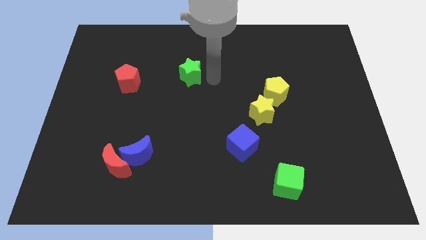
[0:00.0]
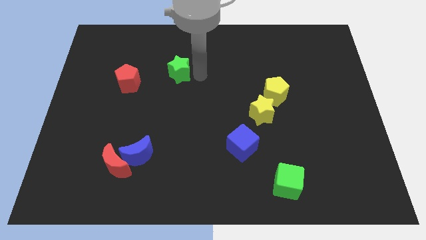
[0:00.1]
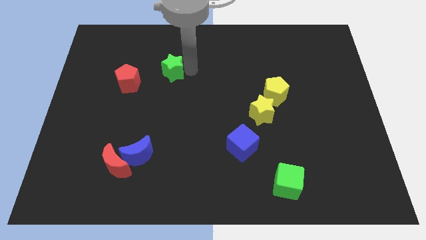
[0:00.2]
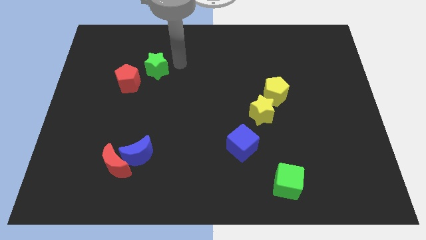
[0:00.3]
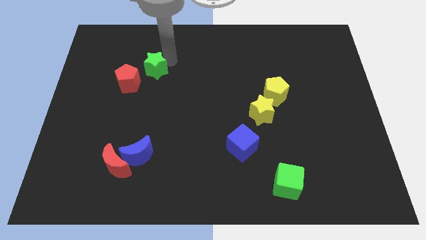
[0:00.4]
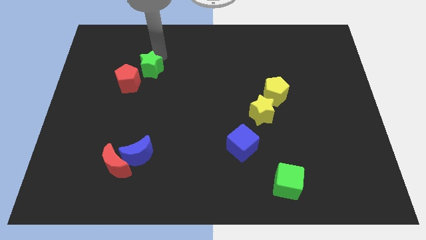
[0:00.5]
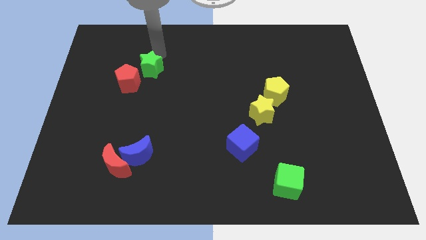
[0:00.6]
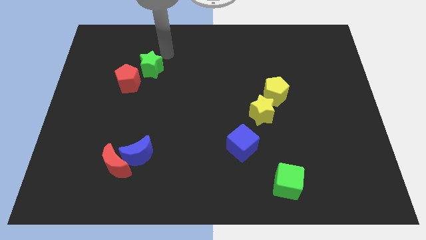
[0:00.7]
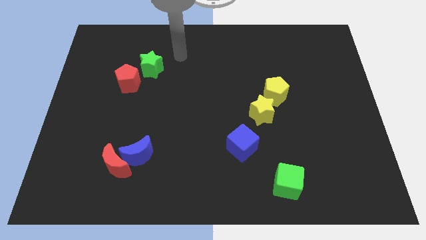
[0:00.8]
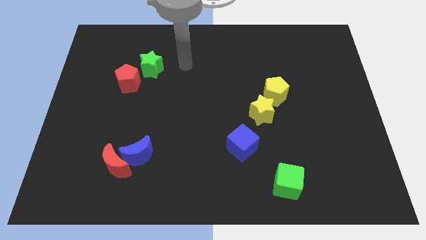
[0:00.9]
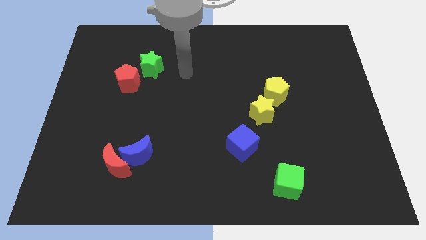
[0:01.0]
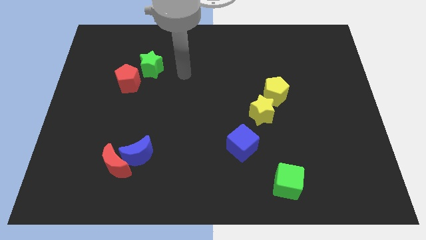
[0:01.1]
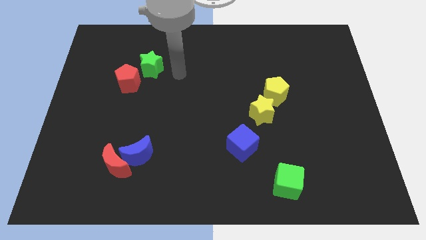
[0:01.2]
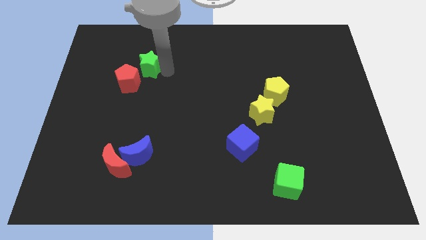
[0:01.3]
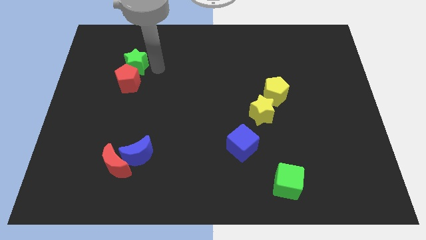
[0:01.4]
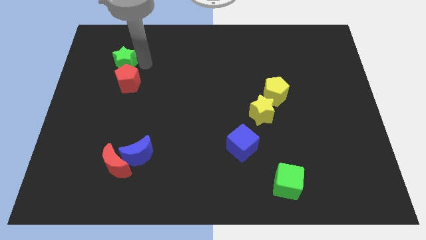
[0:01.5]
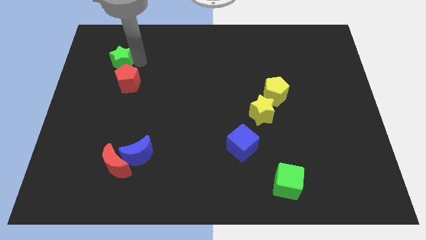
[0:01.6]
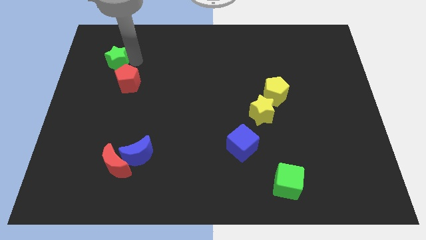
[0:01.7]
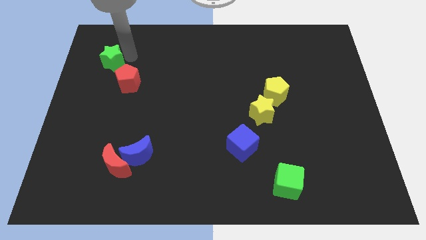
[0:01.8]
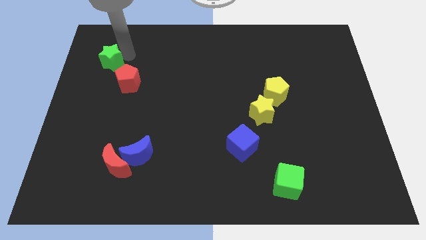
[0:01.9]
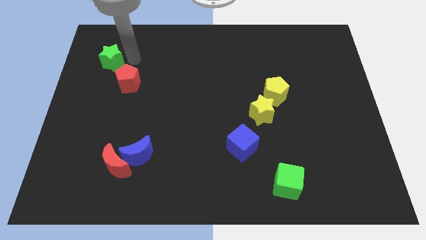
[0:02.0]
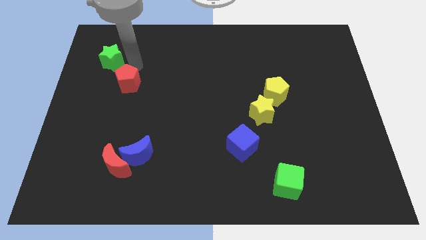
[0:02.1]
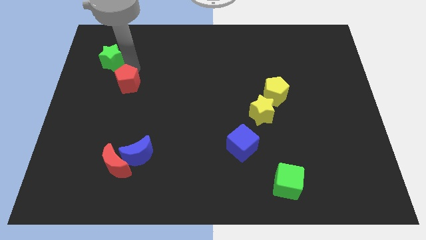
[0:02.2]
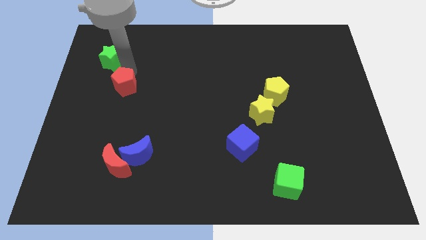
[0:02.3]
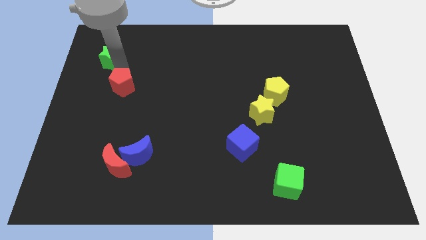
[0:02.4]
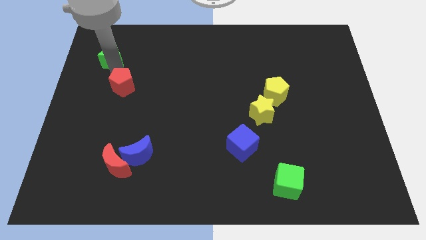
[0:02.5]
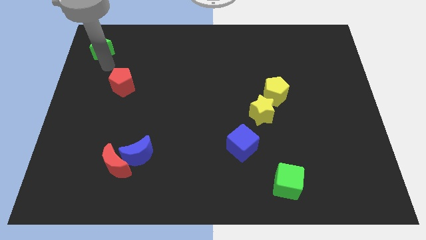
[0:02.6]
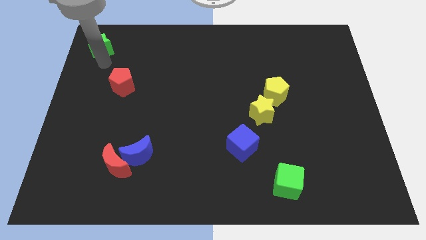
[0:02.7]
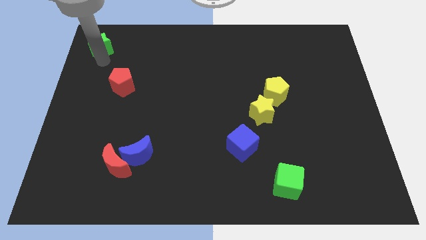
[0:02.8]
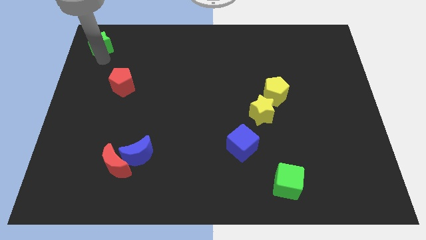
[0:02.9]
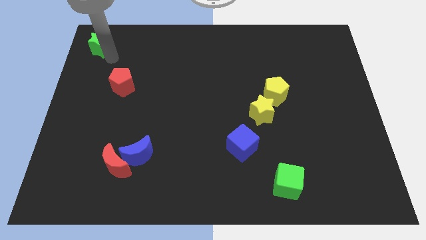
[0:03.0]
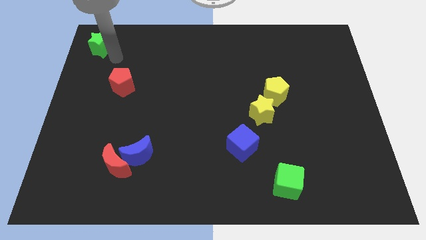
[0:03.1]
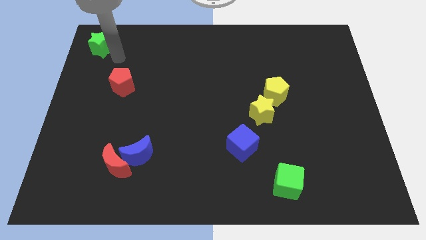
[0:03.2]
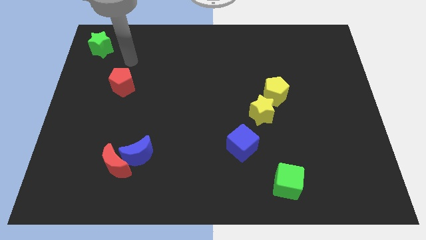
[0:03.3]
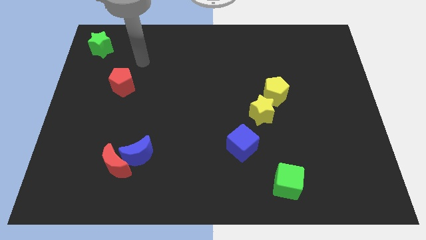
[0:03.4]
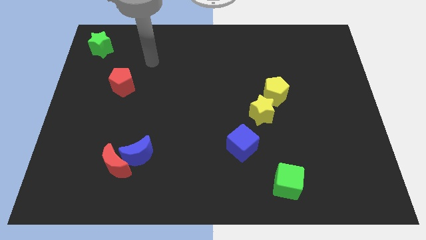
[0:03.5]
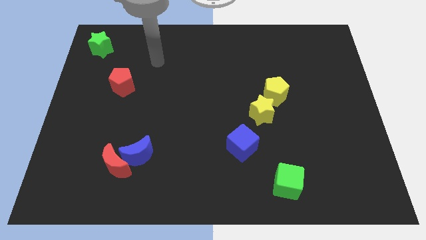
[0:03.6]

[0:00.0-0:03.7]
put the green star at the top left corner of the board

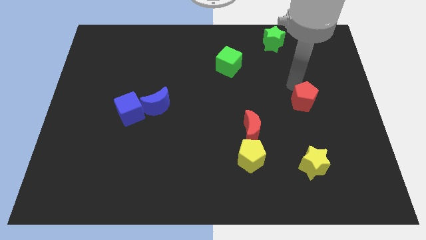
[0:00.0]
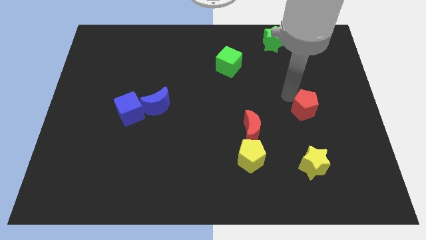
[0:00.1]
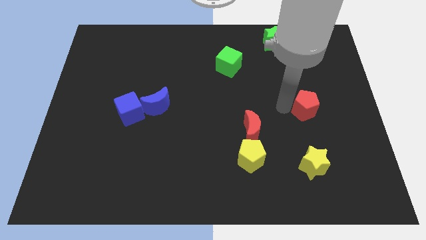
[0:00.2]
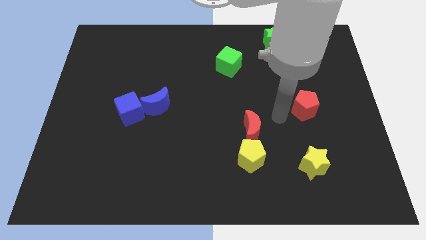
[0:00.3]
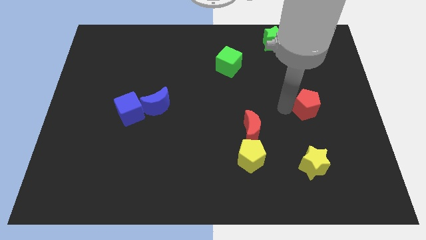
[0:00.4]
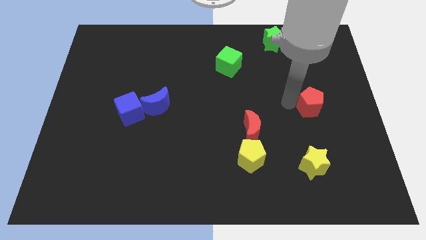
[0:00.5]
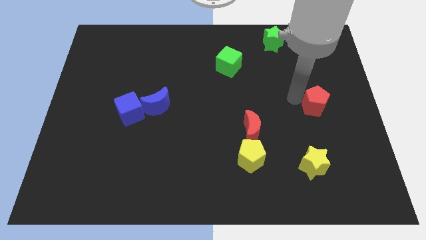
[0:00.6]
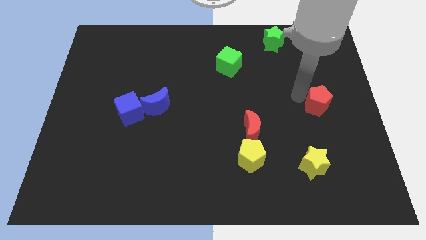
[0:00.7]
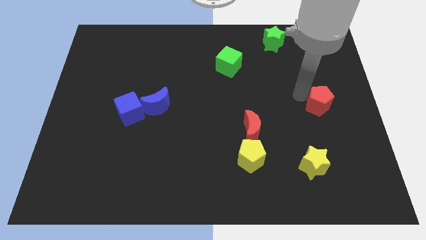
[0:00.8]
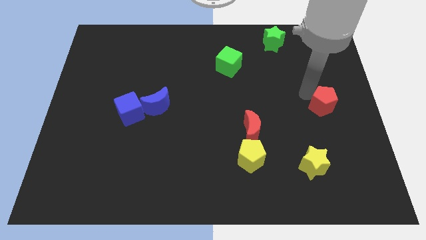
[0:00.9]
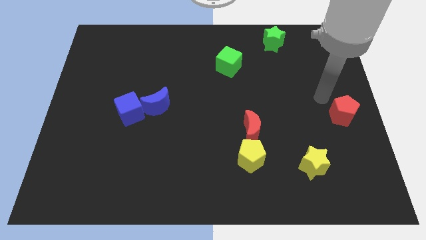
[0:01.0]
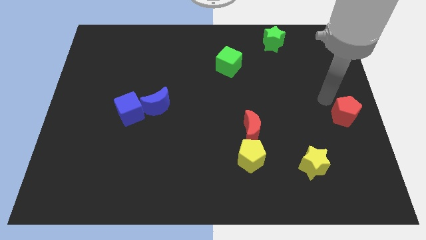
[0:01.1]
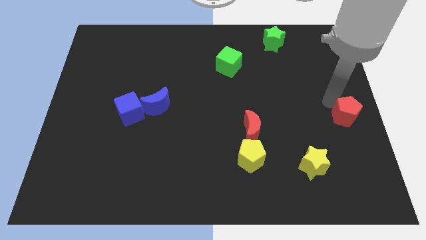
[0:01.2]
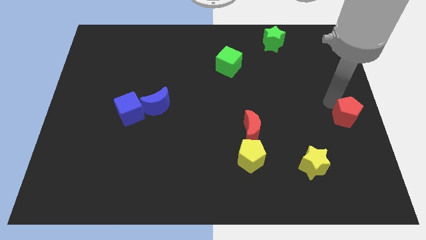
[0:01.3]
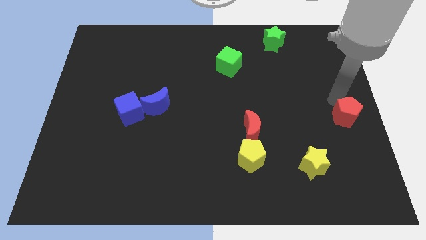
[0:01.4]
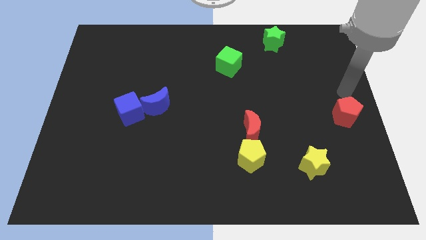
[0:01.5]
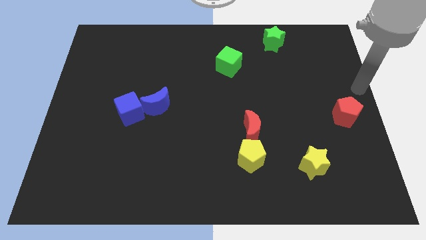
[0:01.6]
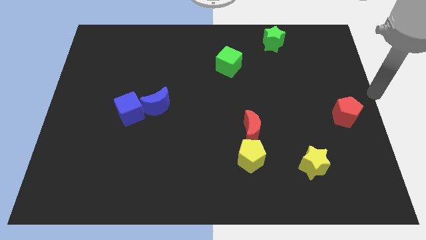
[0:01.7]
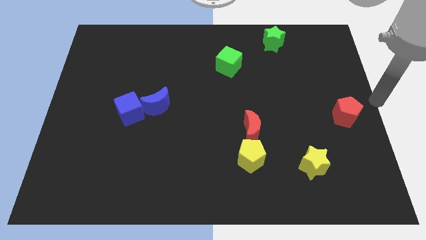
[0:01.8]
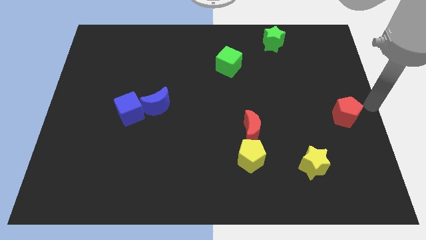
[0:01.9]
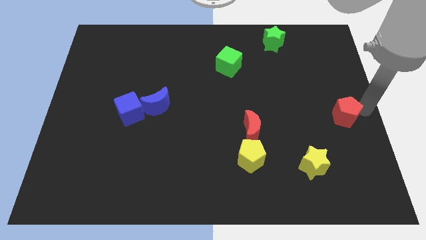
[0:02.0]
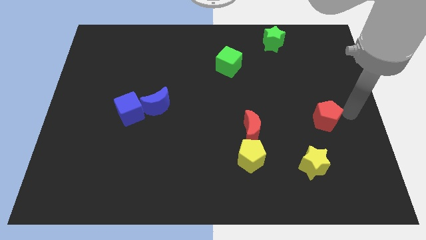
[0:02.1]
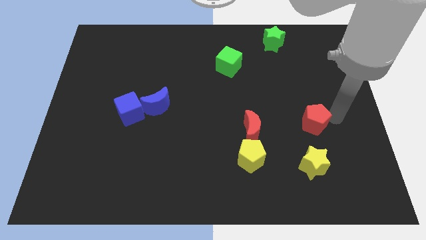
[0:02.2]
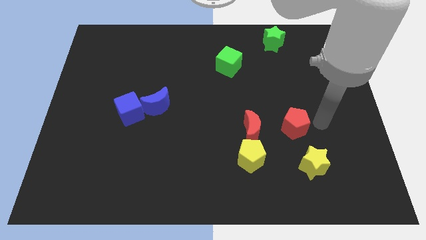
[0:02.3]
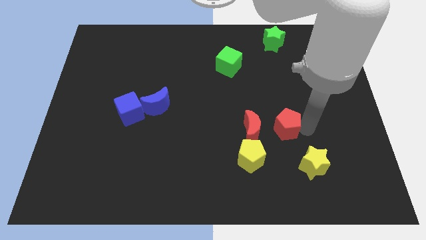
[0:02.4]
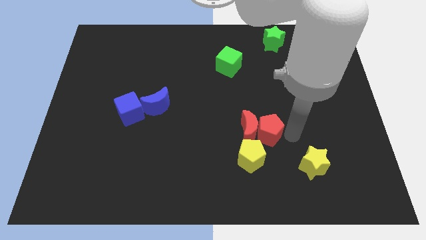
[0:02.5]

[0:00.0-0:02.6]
move the red pentagon to the top right of the red crescent

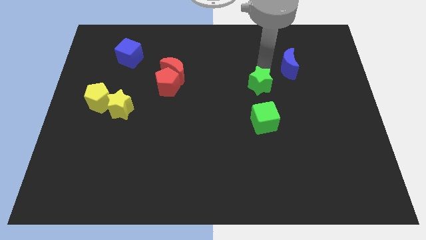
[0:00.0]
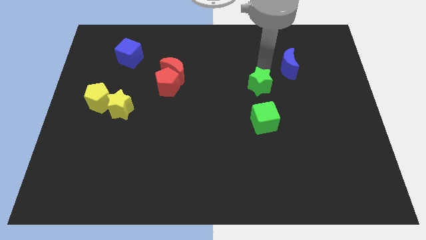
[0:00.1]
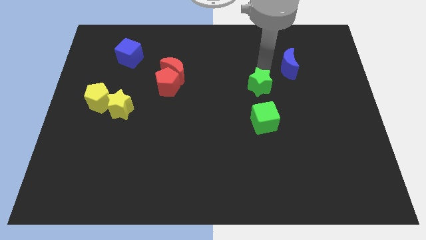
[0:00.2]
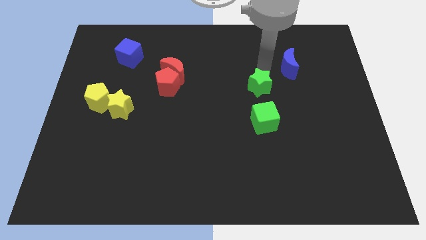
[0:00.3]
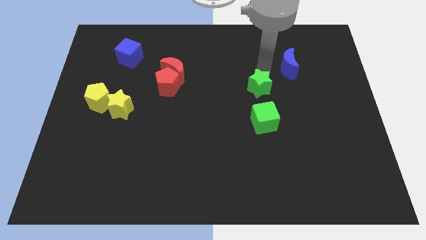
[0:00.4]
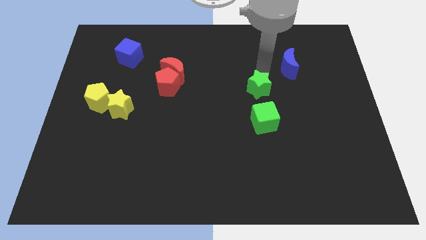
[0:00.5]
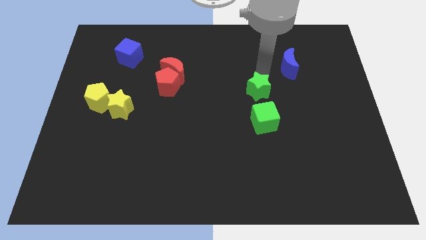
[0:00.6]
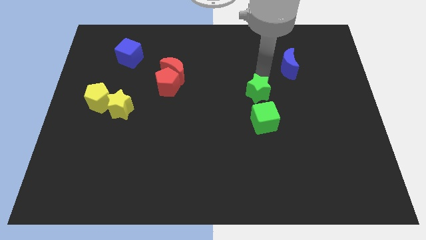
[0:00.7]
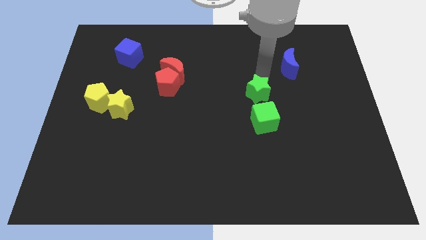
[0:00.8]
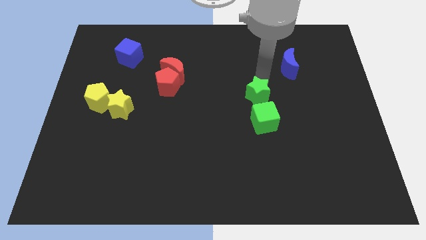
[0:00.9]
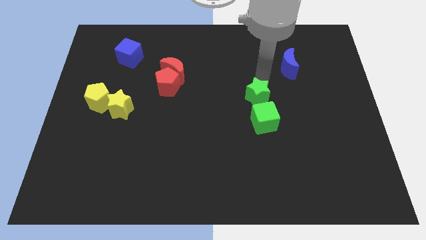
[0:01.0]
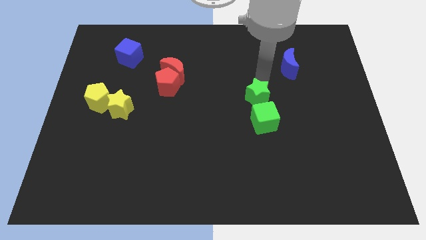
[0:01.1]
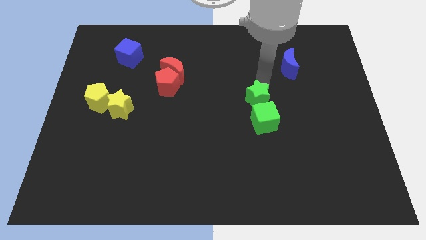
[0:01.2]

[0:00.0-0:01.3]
place green star to the top of green cube

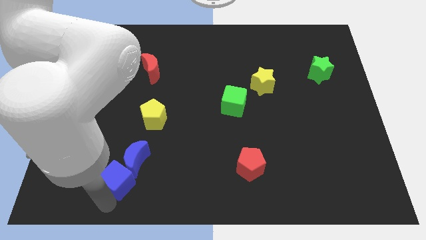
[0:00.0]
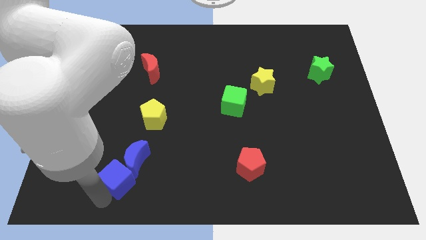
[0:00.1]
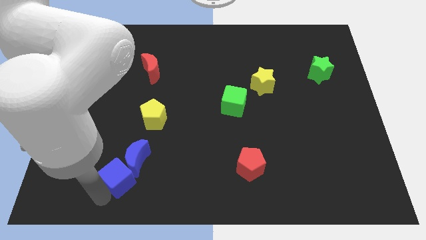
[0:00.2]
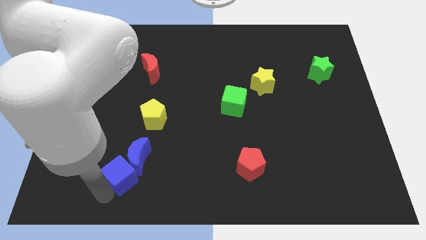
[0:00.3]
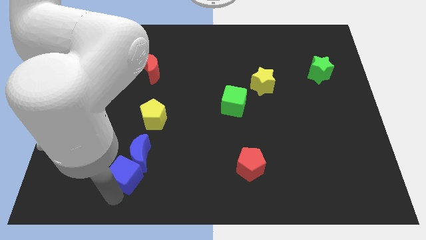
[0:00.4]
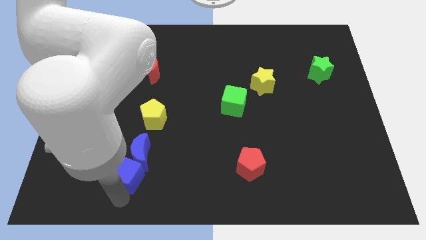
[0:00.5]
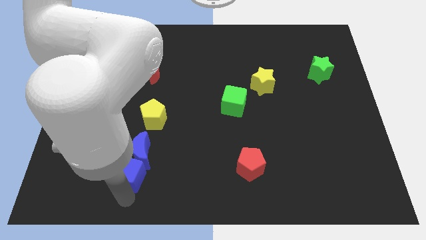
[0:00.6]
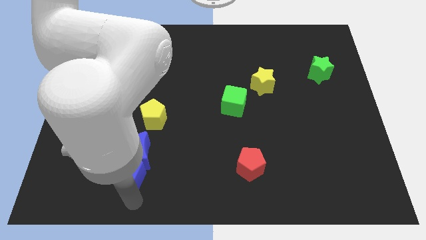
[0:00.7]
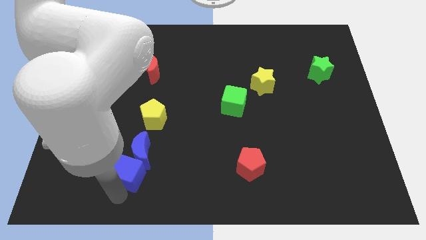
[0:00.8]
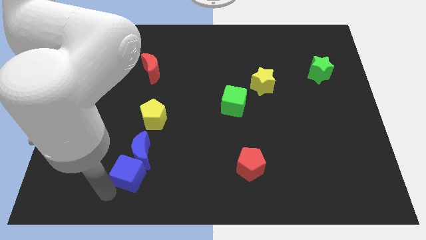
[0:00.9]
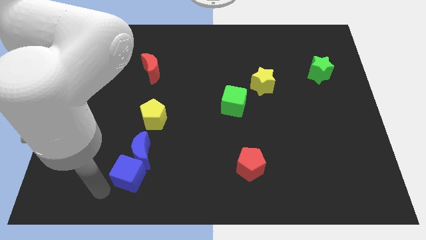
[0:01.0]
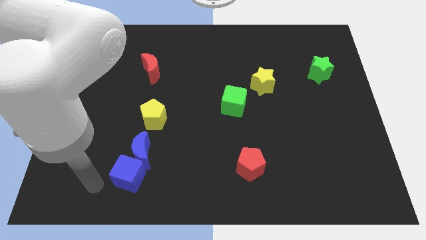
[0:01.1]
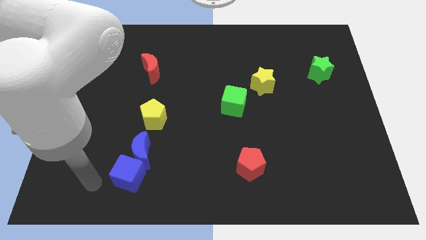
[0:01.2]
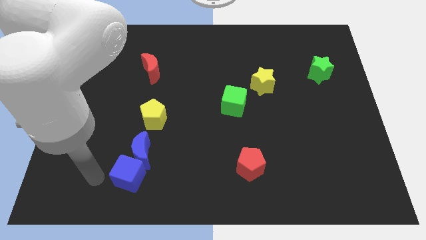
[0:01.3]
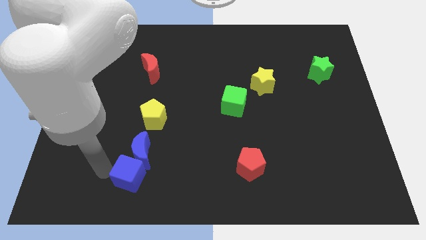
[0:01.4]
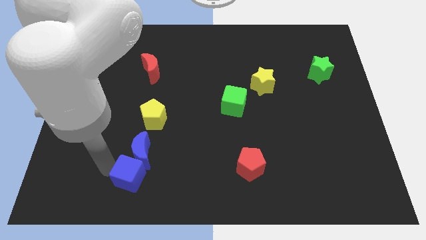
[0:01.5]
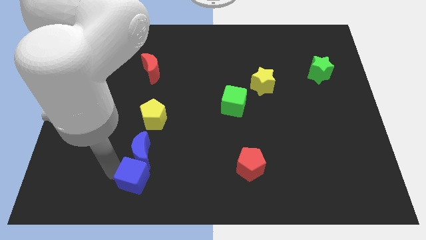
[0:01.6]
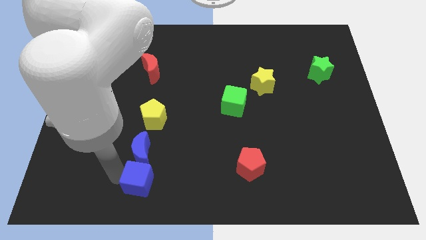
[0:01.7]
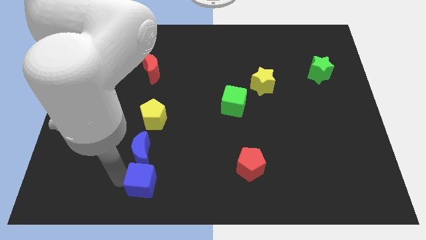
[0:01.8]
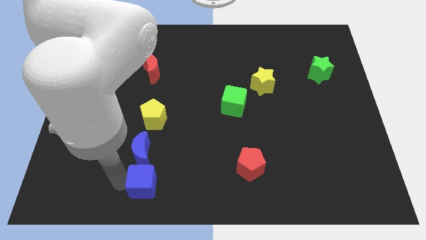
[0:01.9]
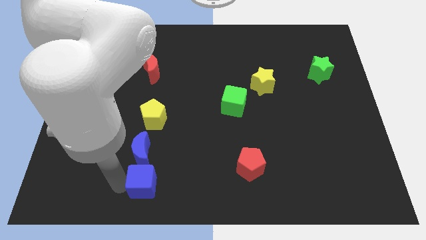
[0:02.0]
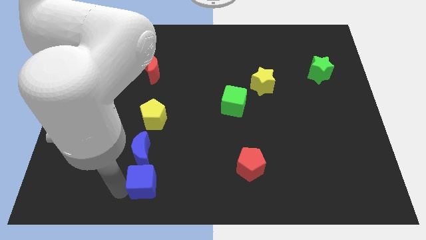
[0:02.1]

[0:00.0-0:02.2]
push blue cube and blue moon closer to the yellow pentagon
